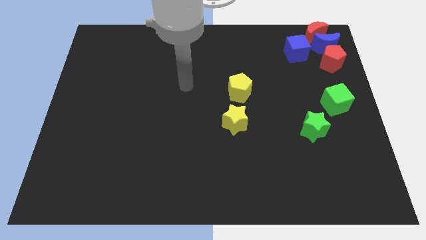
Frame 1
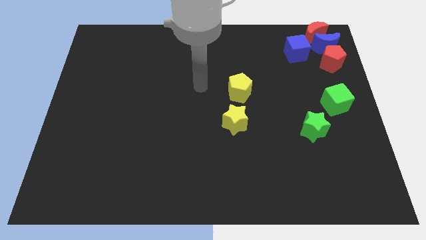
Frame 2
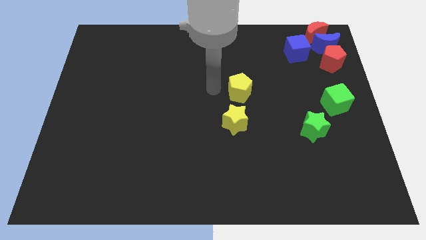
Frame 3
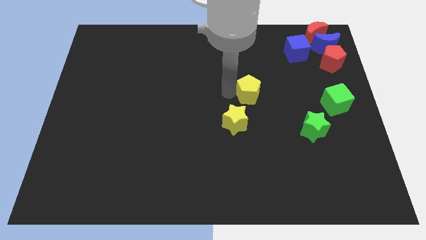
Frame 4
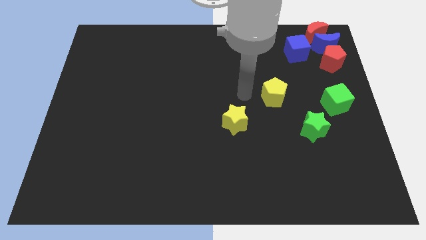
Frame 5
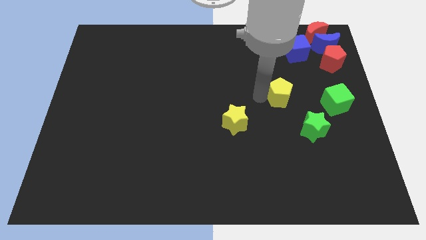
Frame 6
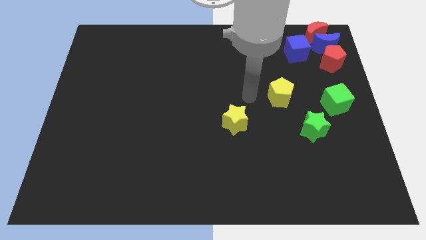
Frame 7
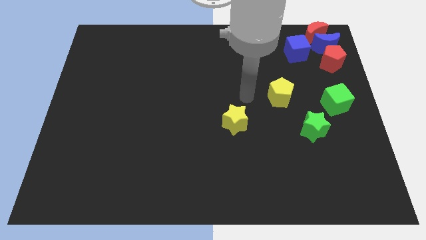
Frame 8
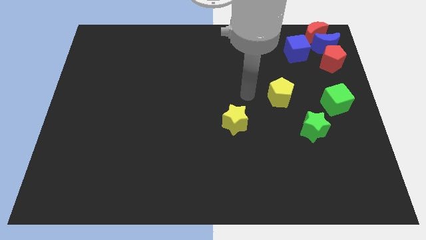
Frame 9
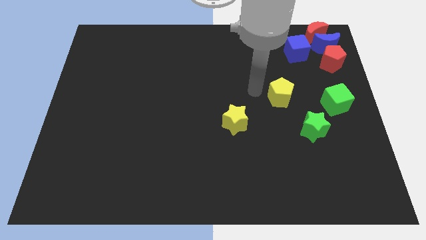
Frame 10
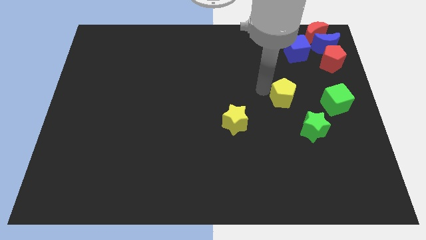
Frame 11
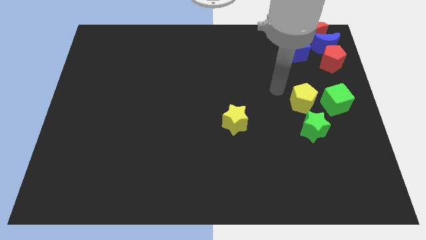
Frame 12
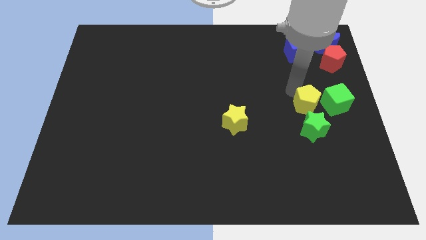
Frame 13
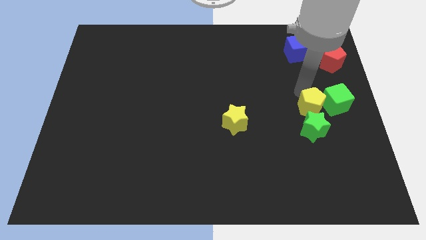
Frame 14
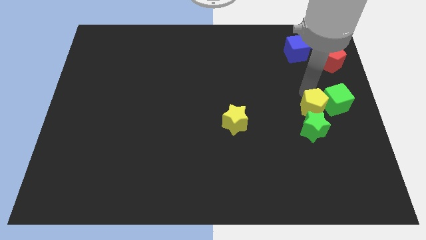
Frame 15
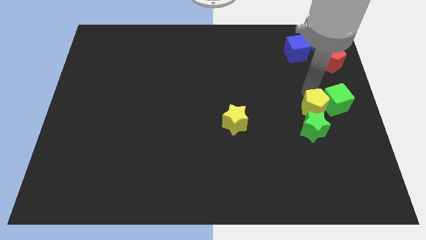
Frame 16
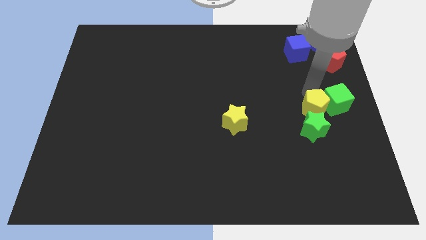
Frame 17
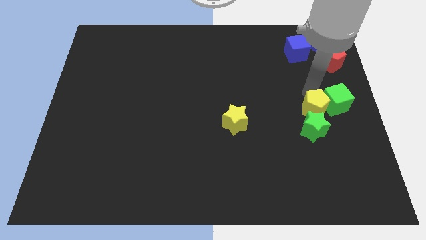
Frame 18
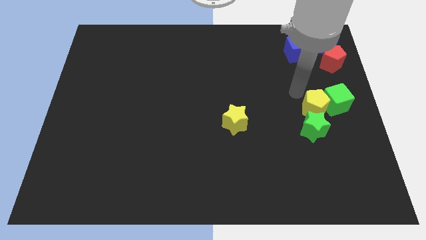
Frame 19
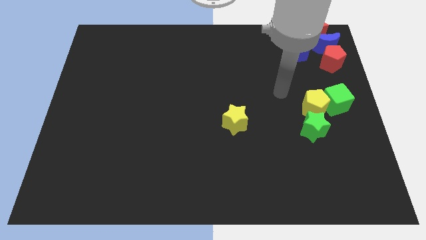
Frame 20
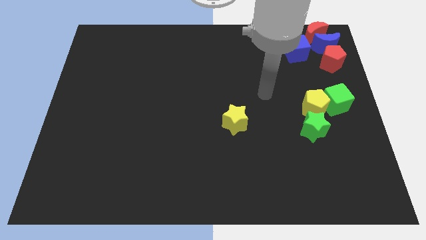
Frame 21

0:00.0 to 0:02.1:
move the yellow pentagon at the left side of the green square

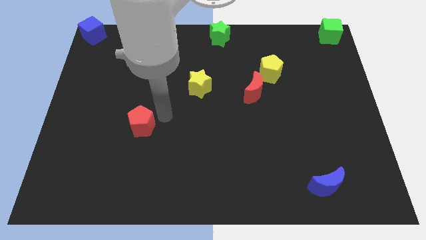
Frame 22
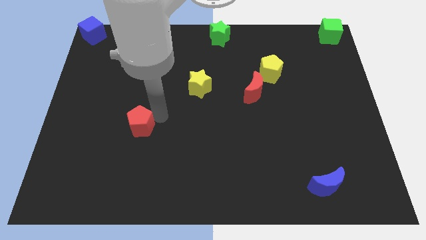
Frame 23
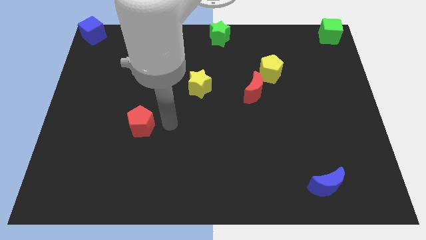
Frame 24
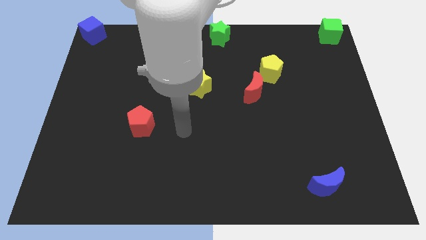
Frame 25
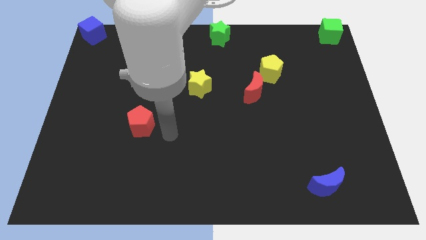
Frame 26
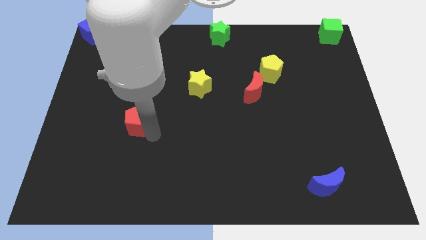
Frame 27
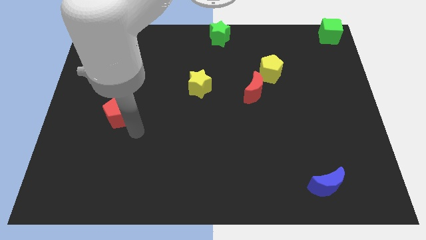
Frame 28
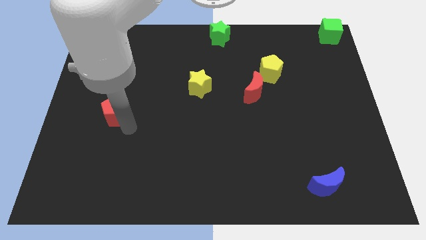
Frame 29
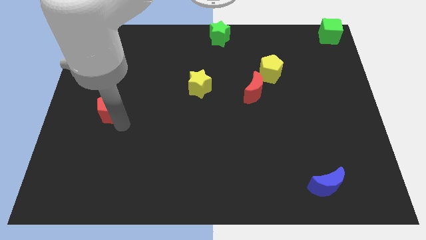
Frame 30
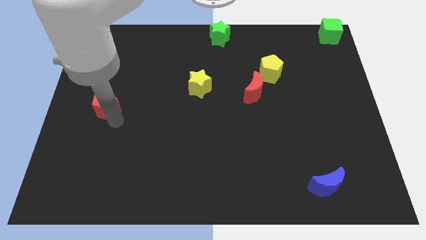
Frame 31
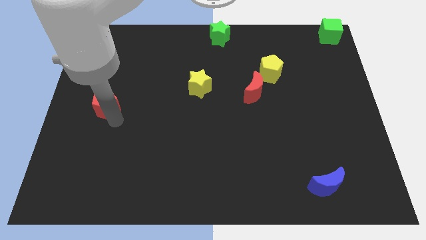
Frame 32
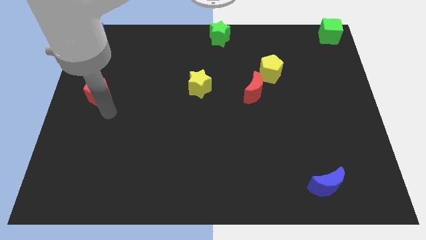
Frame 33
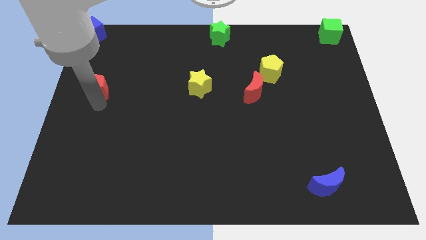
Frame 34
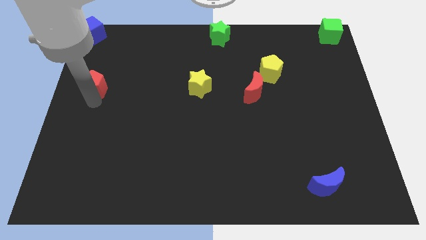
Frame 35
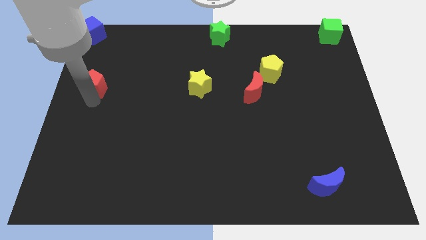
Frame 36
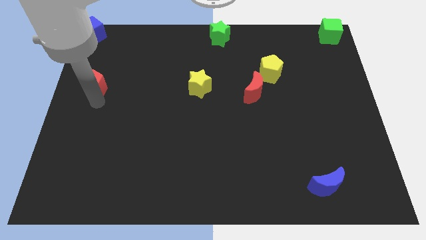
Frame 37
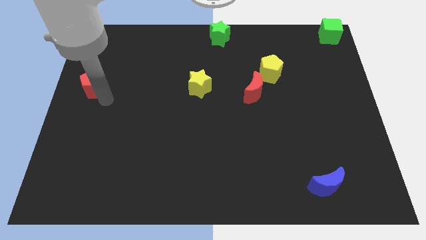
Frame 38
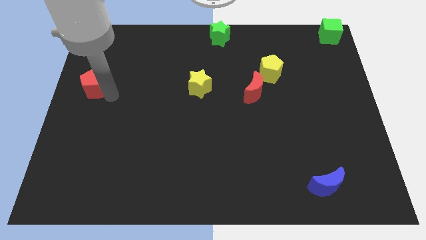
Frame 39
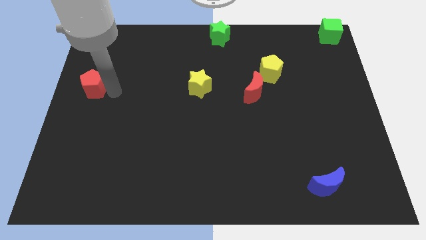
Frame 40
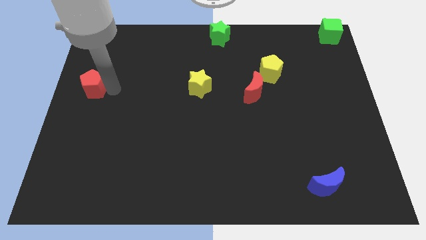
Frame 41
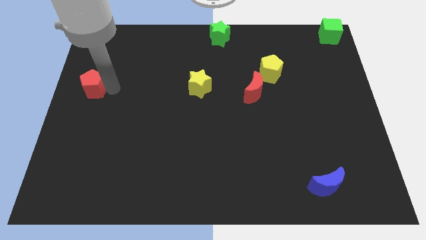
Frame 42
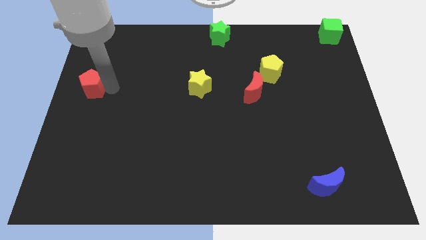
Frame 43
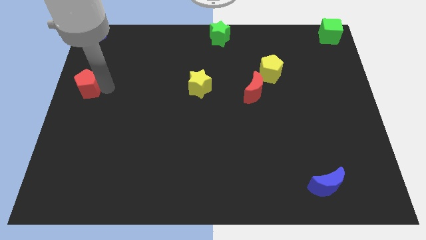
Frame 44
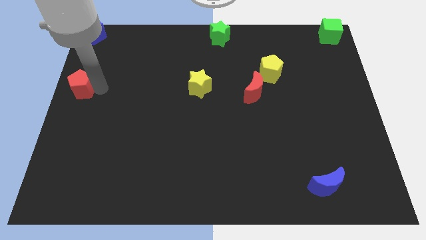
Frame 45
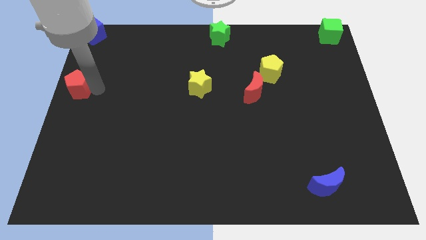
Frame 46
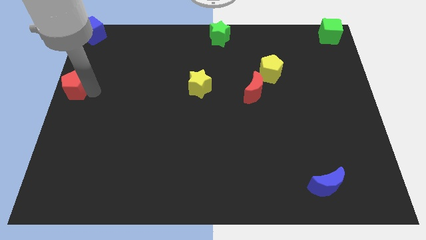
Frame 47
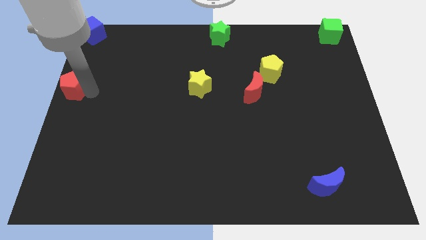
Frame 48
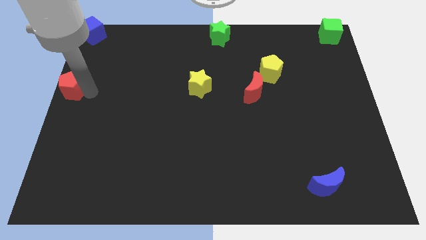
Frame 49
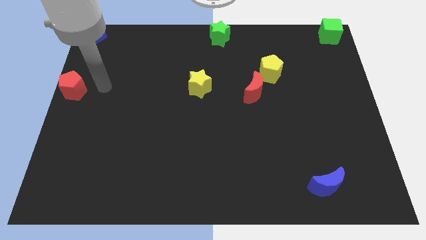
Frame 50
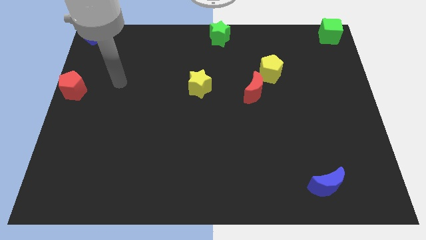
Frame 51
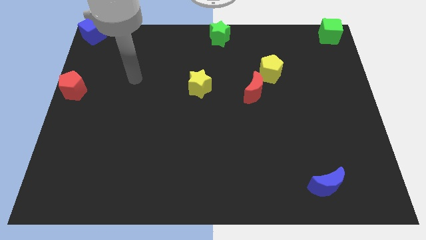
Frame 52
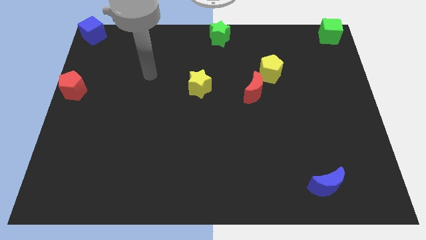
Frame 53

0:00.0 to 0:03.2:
put the red pentagon vertically below the blue cube

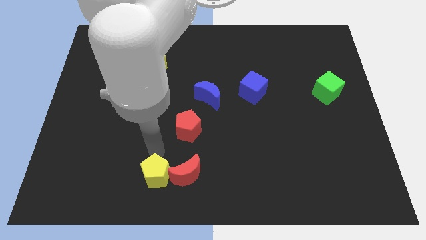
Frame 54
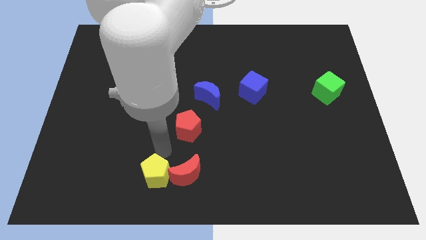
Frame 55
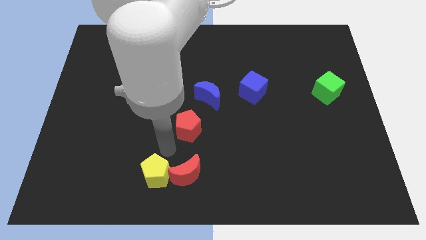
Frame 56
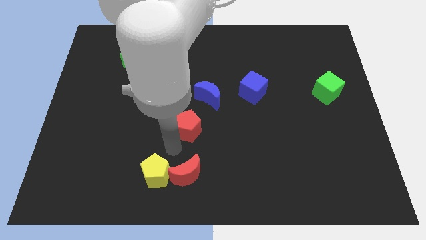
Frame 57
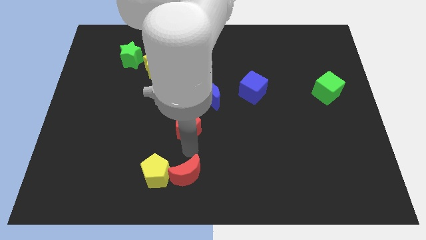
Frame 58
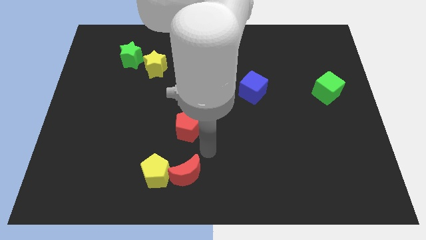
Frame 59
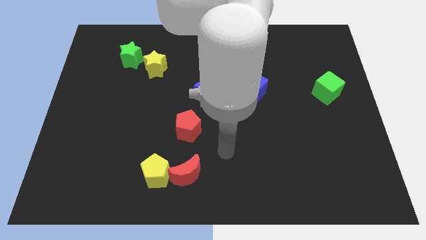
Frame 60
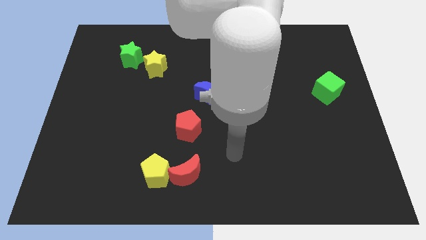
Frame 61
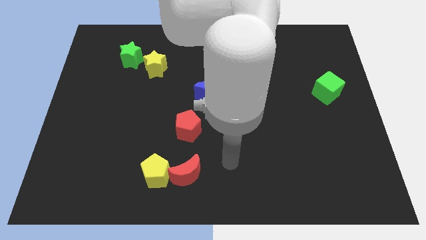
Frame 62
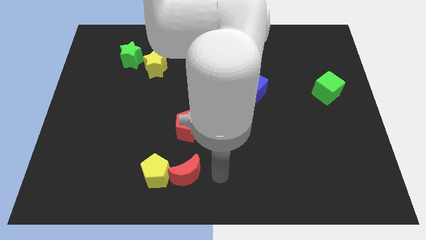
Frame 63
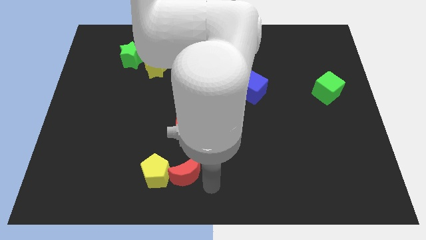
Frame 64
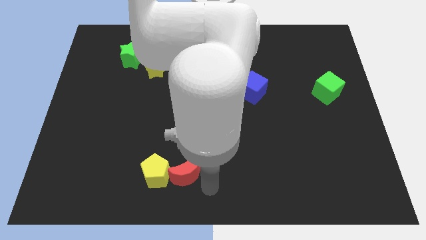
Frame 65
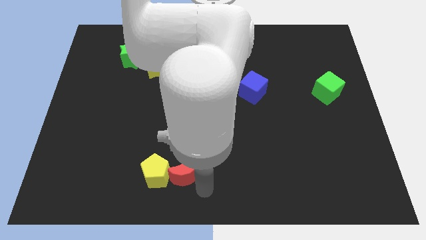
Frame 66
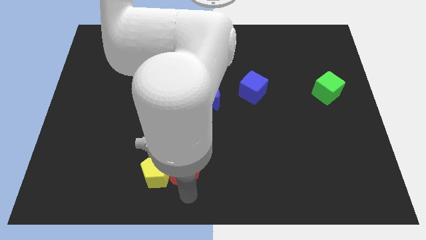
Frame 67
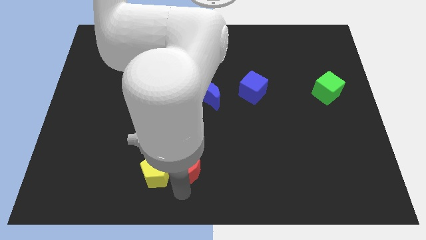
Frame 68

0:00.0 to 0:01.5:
place your arm to the bottom side of the red moon

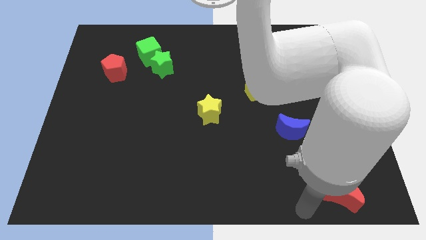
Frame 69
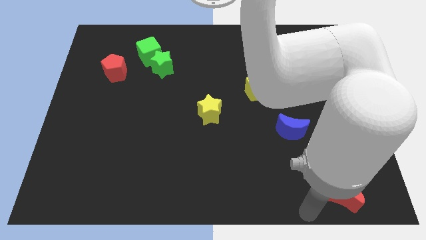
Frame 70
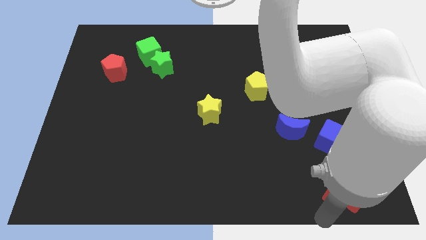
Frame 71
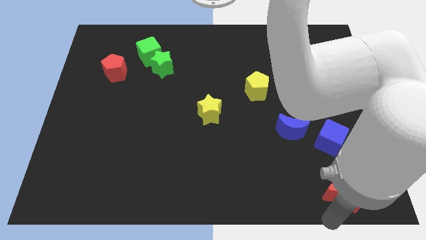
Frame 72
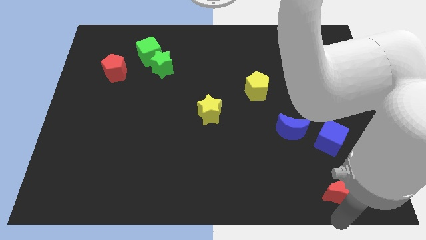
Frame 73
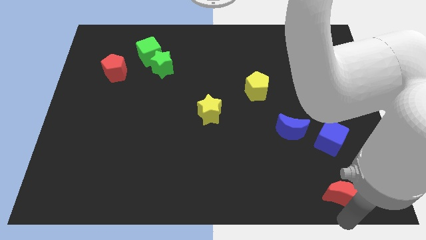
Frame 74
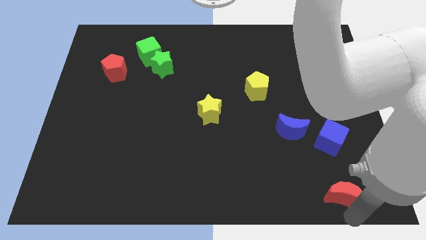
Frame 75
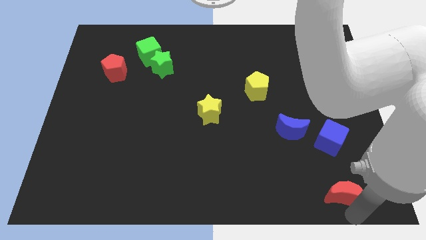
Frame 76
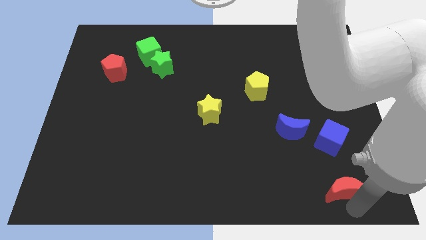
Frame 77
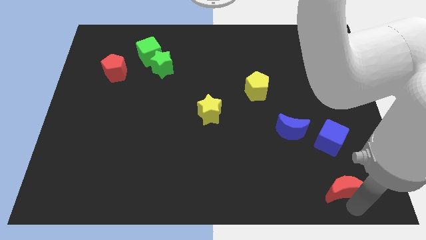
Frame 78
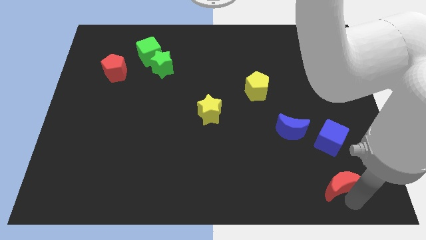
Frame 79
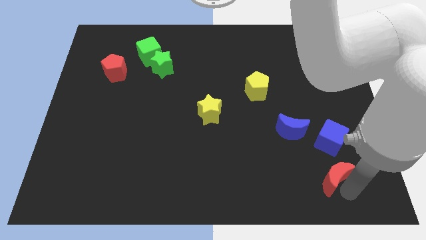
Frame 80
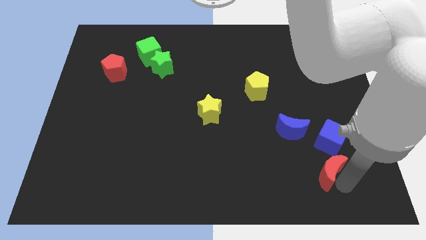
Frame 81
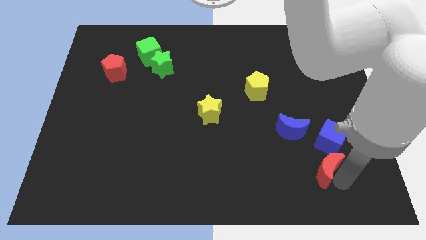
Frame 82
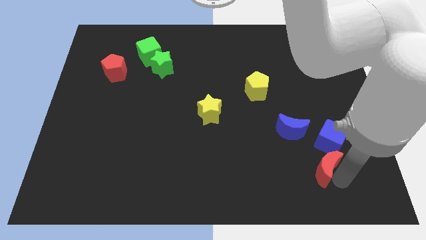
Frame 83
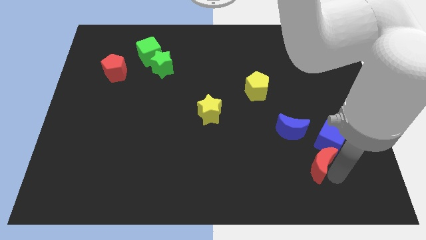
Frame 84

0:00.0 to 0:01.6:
place red crescent at the bottom of blue cube

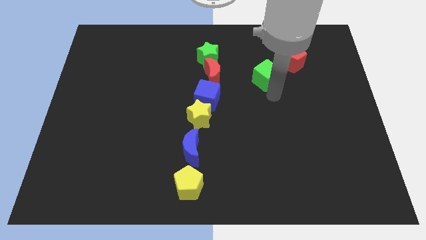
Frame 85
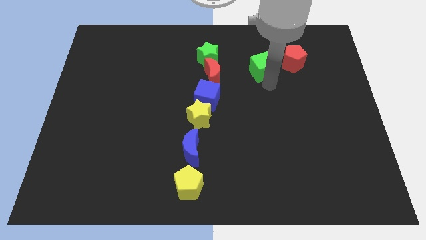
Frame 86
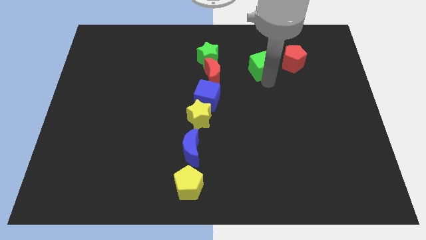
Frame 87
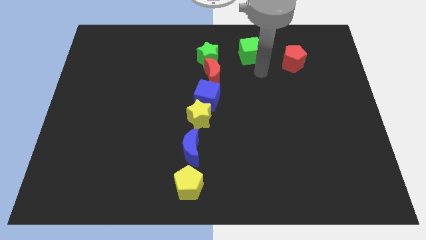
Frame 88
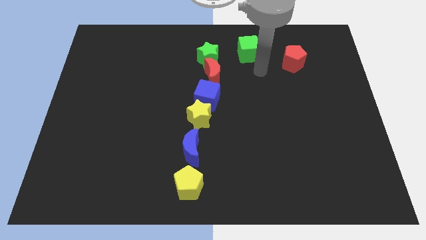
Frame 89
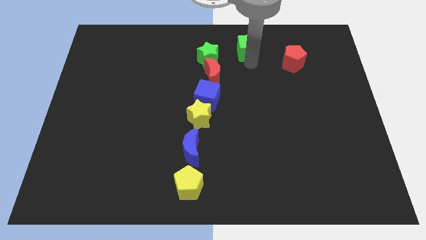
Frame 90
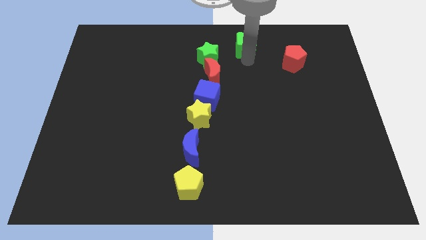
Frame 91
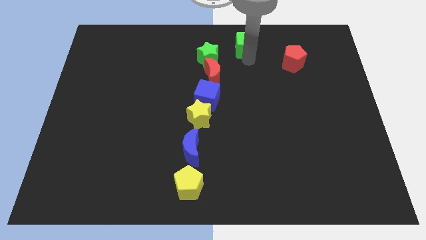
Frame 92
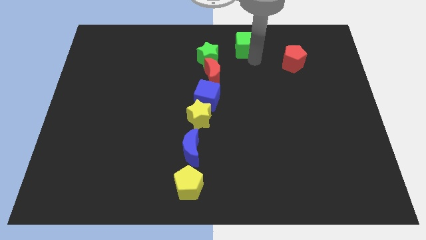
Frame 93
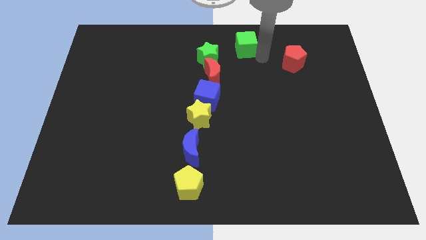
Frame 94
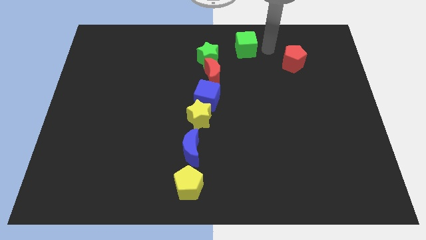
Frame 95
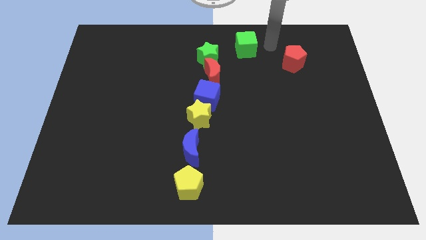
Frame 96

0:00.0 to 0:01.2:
drag the green cube towards up
